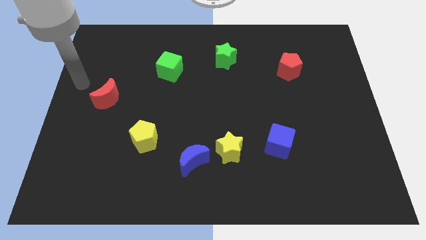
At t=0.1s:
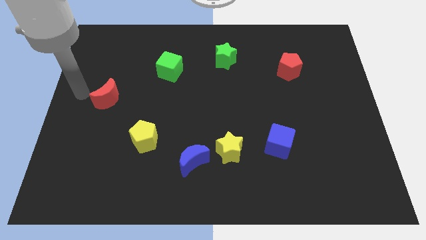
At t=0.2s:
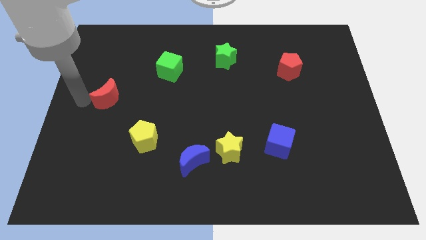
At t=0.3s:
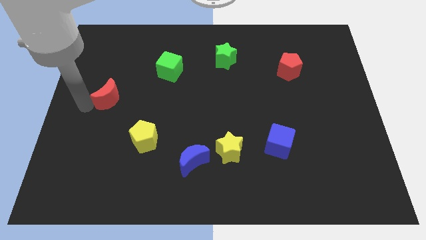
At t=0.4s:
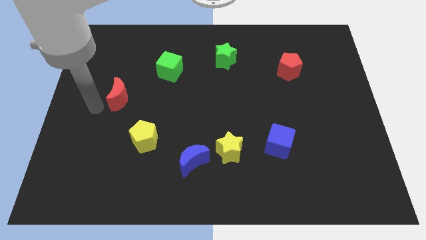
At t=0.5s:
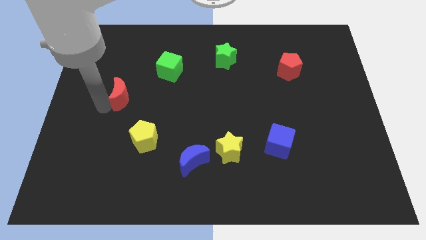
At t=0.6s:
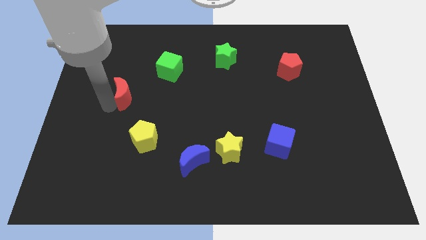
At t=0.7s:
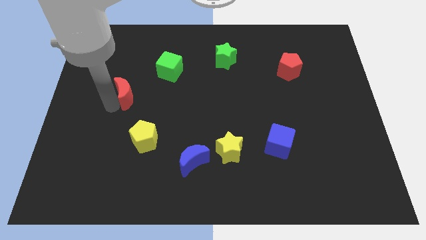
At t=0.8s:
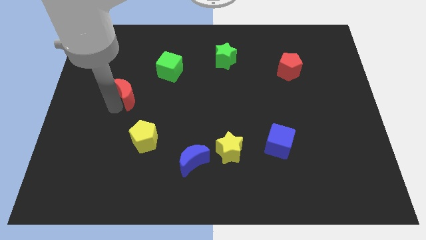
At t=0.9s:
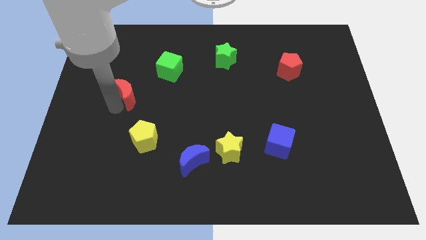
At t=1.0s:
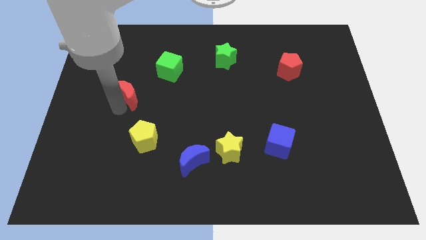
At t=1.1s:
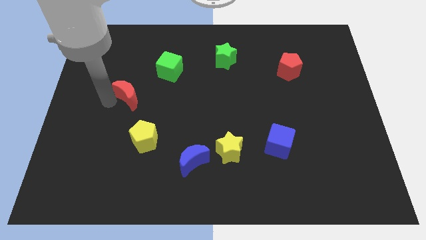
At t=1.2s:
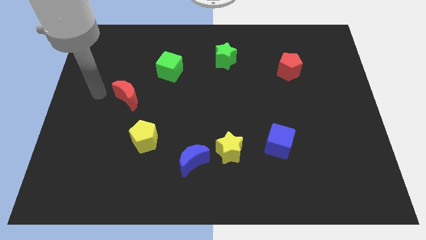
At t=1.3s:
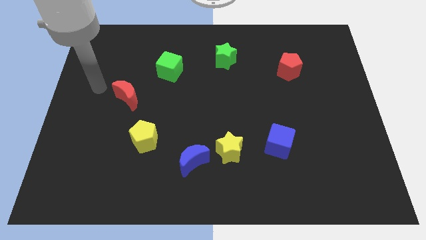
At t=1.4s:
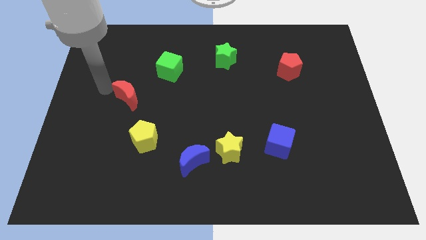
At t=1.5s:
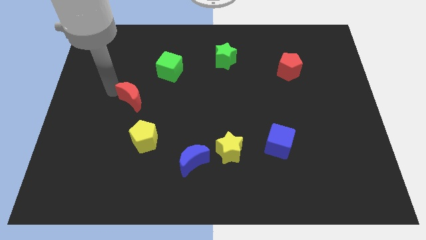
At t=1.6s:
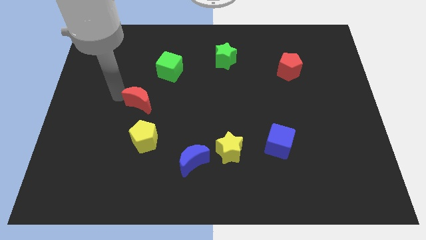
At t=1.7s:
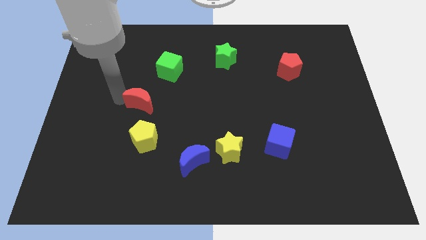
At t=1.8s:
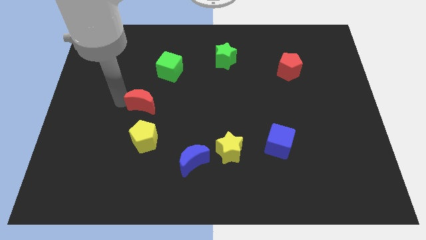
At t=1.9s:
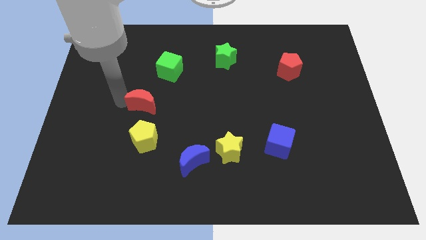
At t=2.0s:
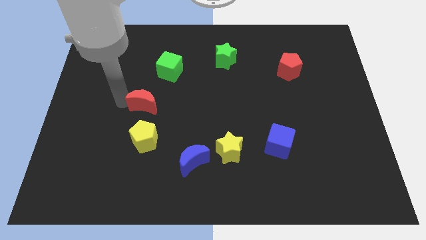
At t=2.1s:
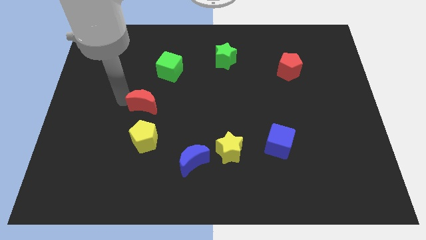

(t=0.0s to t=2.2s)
place the red crescent to the top of the yellow pentagon

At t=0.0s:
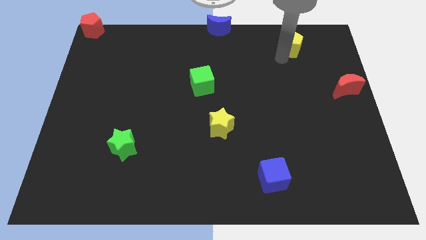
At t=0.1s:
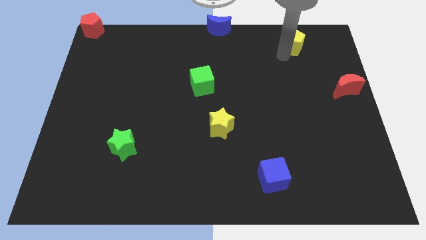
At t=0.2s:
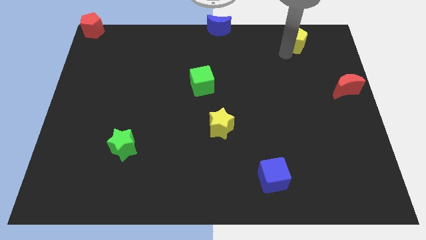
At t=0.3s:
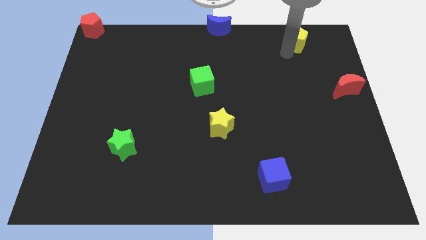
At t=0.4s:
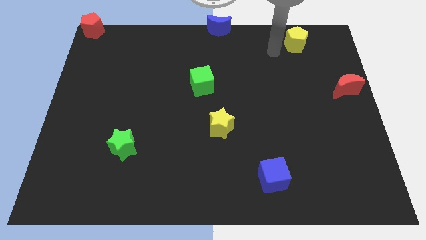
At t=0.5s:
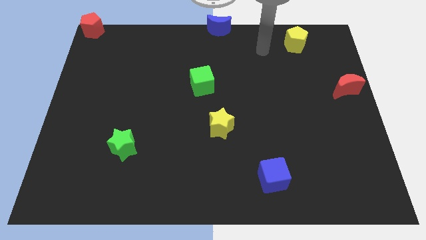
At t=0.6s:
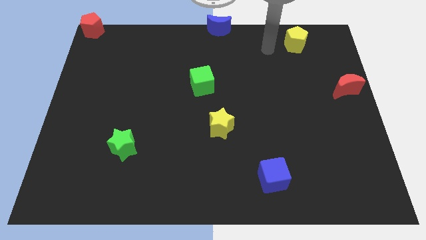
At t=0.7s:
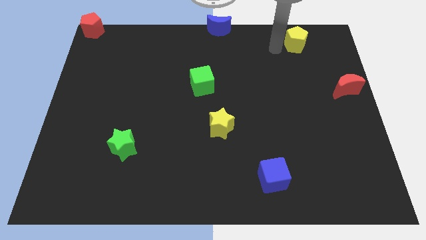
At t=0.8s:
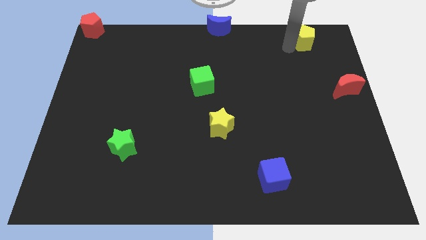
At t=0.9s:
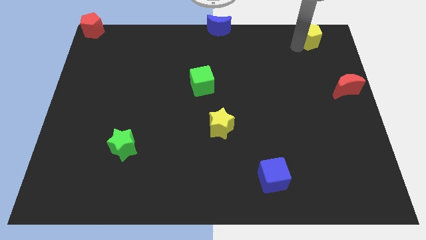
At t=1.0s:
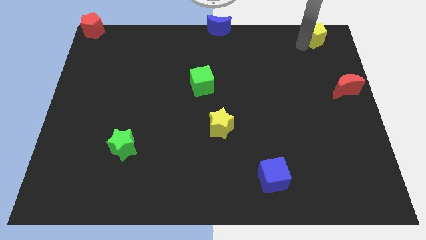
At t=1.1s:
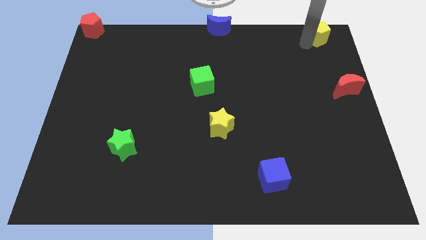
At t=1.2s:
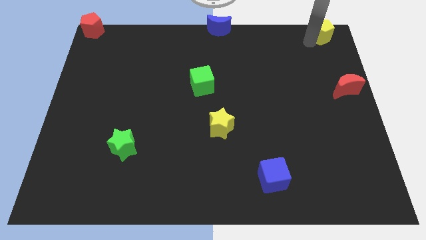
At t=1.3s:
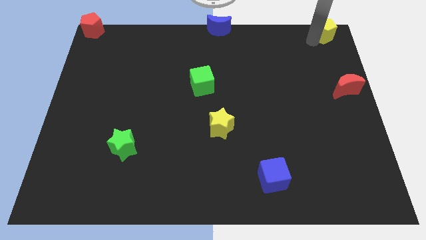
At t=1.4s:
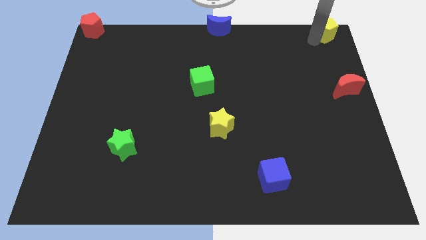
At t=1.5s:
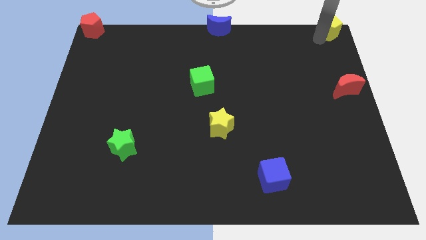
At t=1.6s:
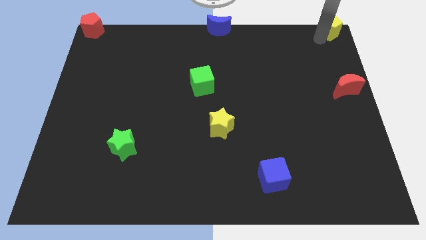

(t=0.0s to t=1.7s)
place the yellow pentagon to the top right corner of the board

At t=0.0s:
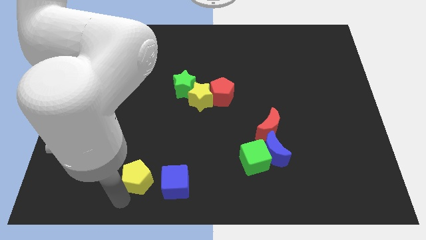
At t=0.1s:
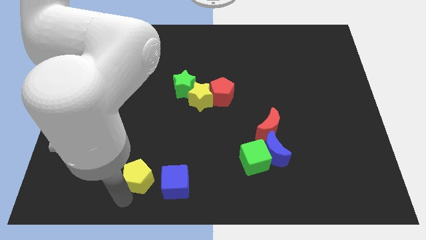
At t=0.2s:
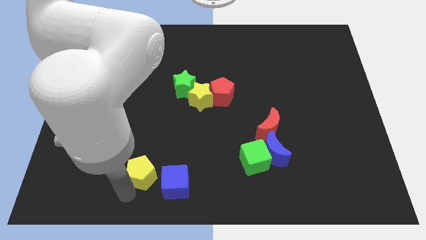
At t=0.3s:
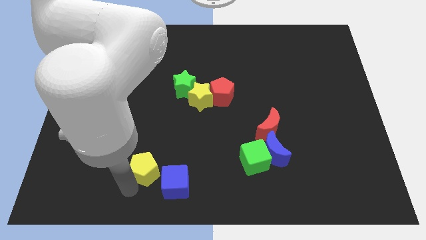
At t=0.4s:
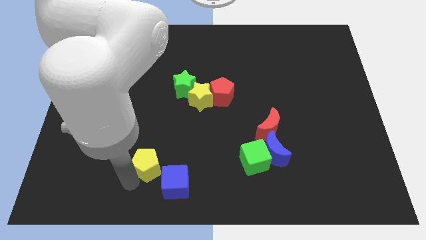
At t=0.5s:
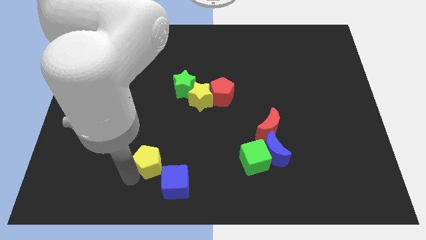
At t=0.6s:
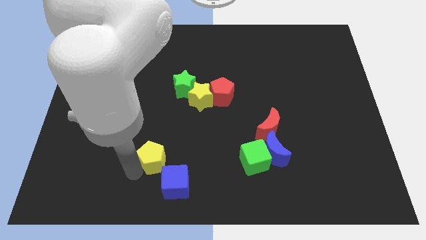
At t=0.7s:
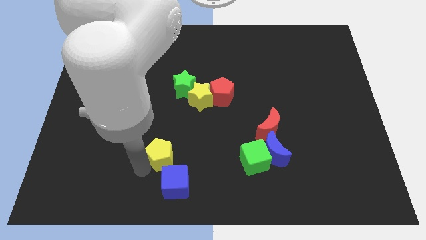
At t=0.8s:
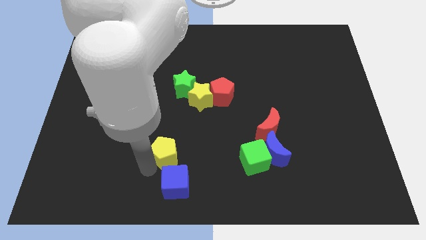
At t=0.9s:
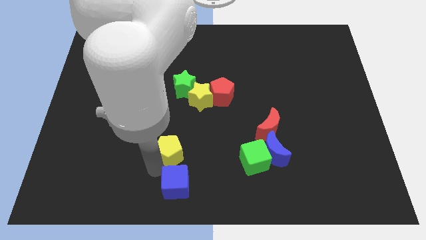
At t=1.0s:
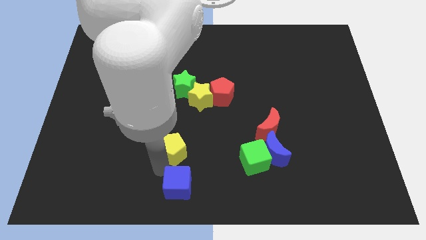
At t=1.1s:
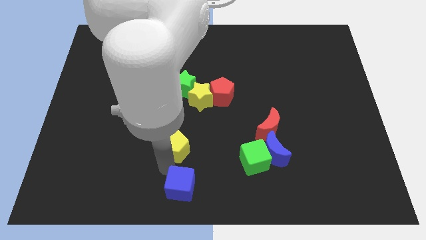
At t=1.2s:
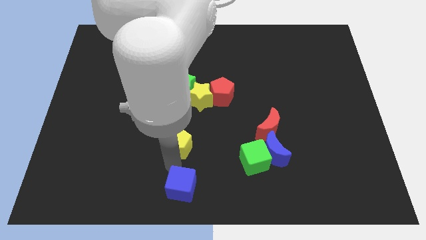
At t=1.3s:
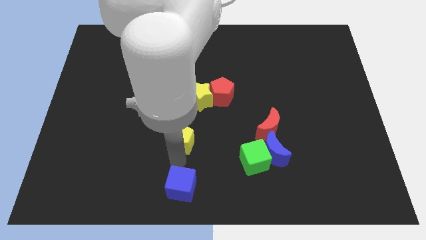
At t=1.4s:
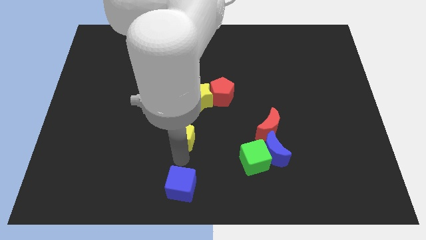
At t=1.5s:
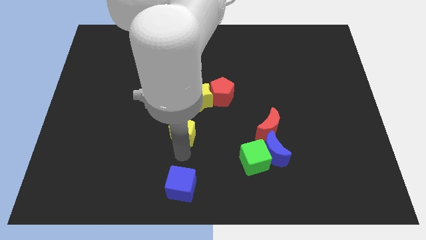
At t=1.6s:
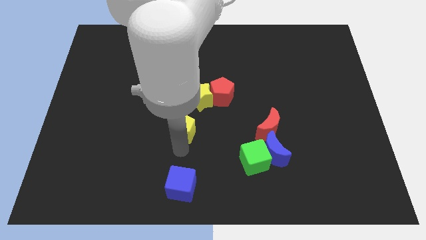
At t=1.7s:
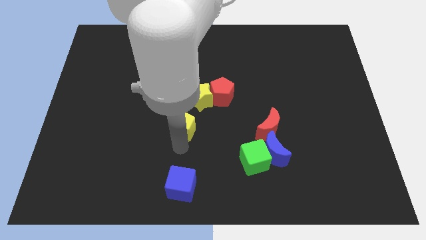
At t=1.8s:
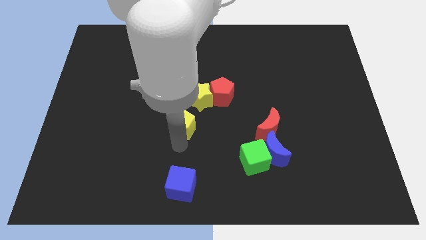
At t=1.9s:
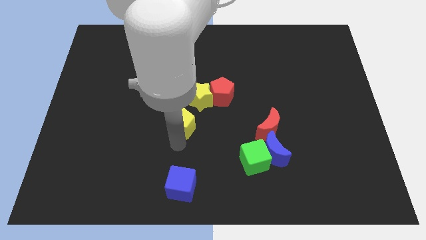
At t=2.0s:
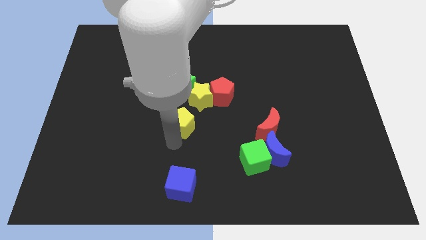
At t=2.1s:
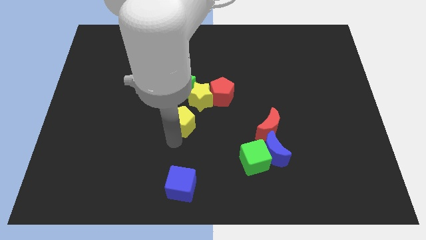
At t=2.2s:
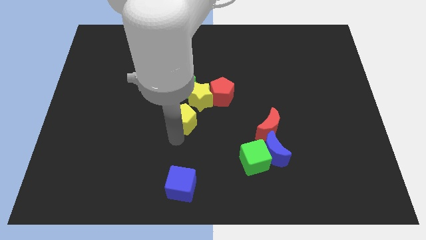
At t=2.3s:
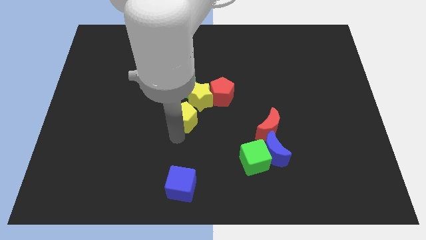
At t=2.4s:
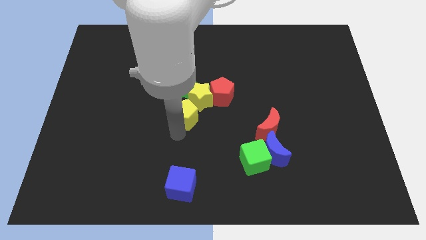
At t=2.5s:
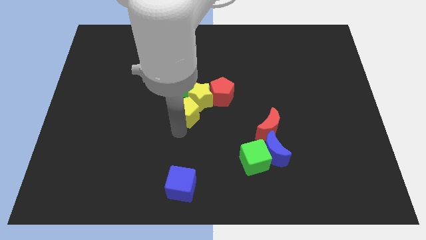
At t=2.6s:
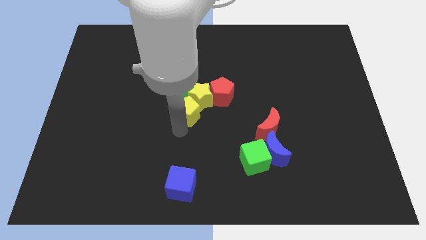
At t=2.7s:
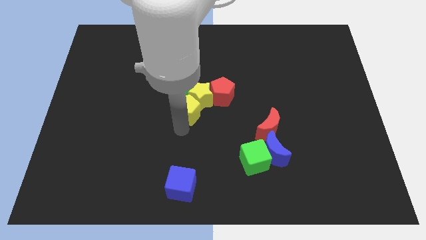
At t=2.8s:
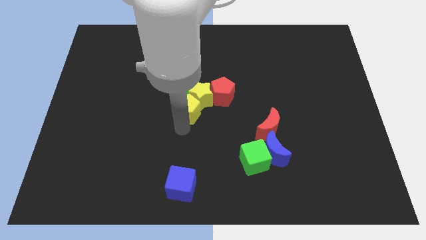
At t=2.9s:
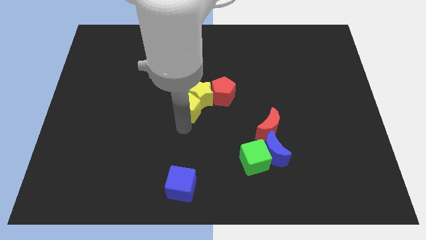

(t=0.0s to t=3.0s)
move the yellow pentagon towards the bottom of the yellow star

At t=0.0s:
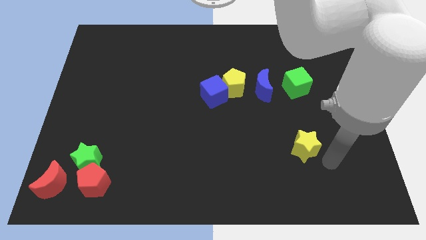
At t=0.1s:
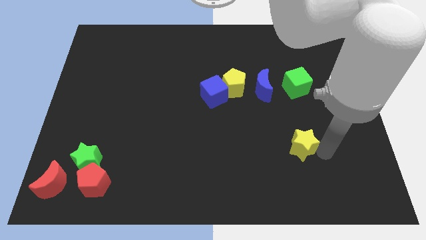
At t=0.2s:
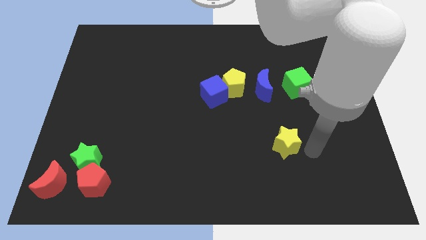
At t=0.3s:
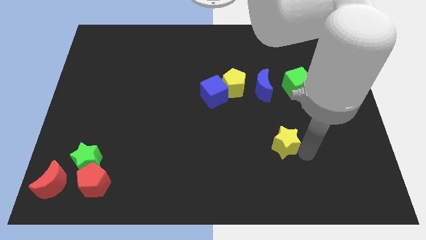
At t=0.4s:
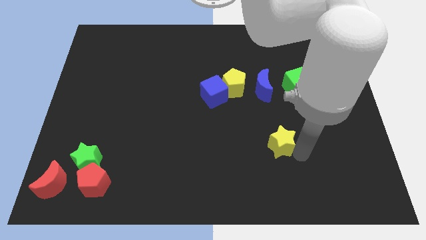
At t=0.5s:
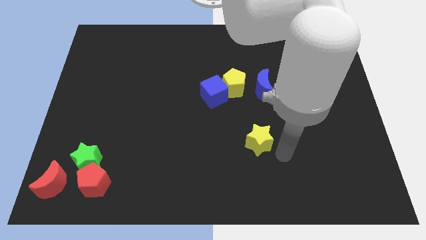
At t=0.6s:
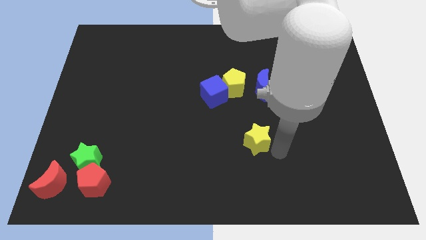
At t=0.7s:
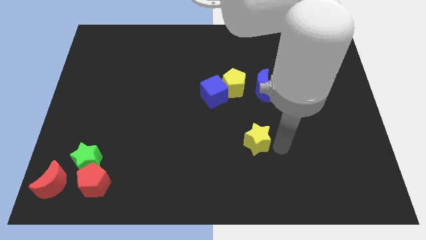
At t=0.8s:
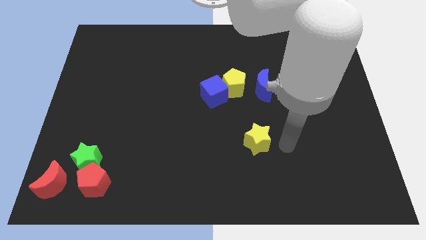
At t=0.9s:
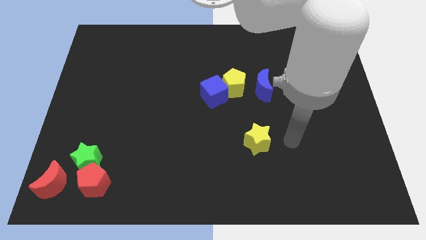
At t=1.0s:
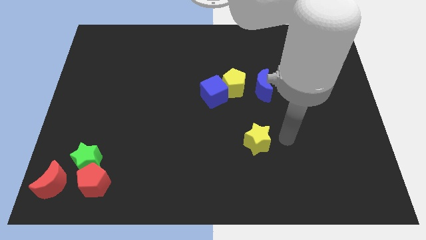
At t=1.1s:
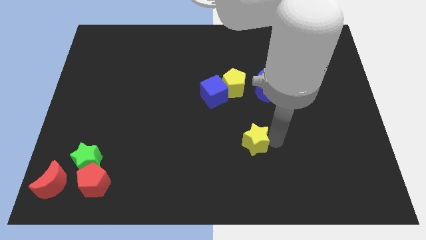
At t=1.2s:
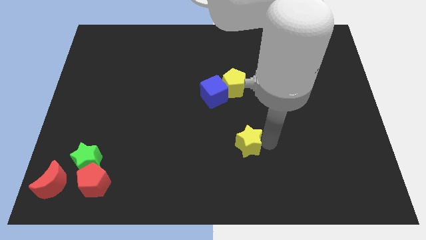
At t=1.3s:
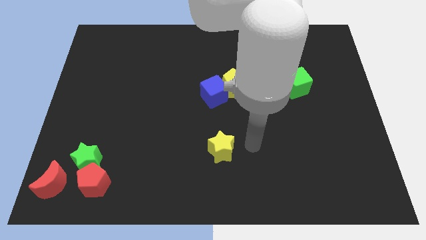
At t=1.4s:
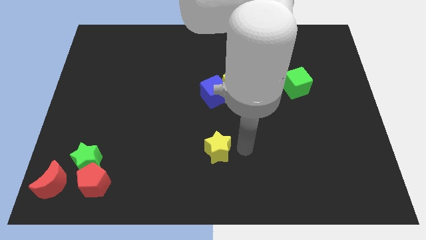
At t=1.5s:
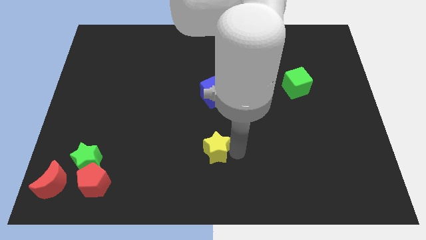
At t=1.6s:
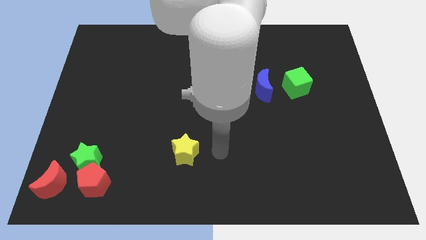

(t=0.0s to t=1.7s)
move yellow star to the bottom of blue cube

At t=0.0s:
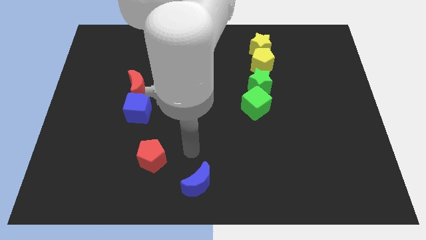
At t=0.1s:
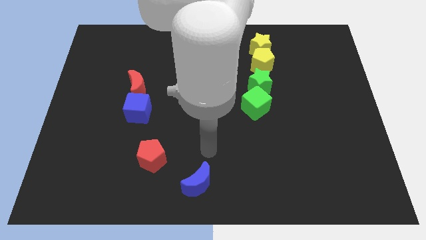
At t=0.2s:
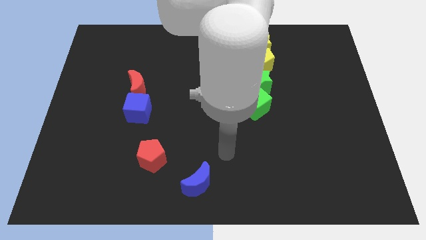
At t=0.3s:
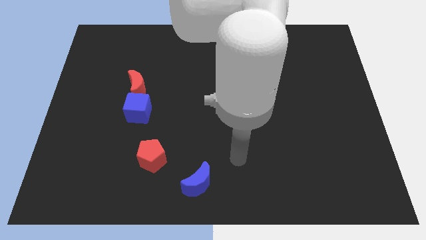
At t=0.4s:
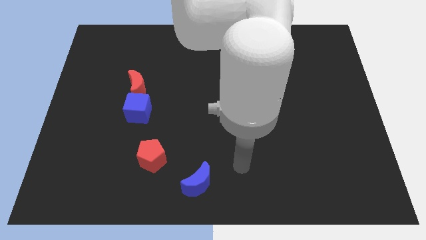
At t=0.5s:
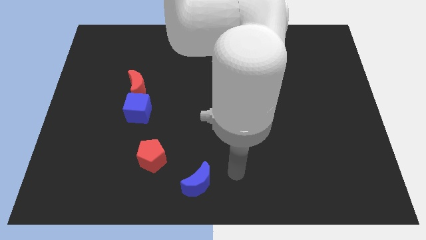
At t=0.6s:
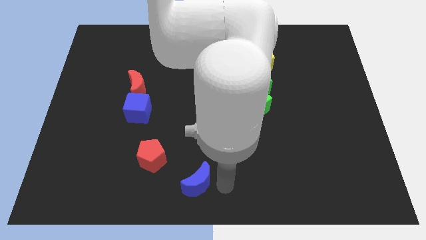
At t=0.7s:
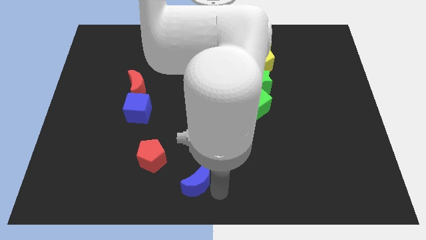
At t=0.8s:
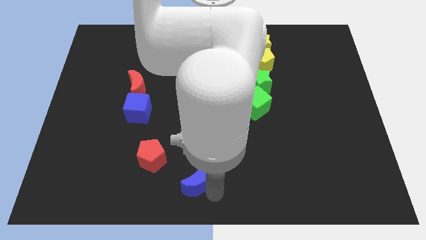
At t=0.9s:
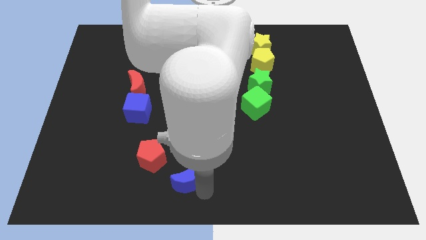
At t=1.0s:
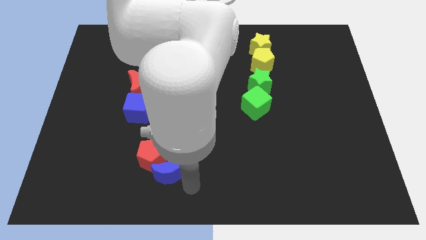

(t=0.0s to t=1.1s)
push the blue moon towards the red pentagon
